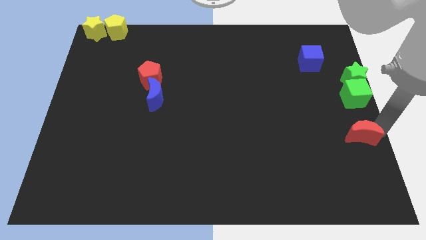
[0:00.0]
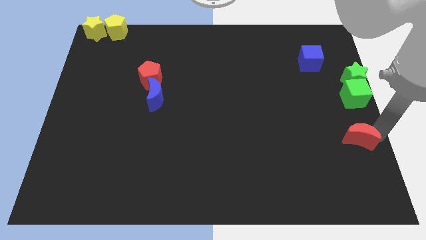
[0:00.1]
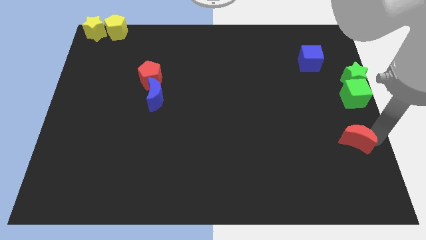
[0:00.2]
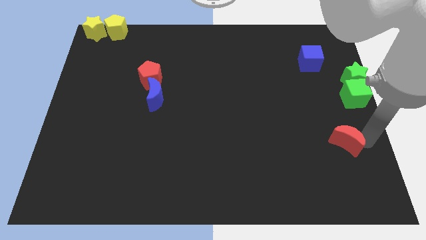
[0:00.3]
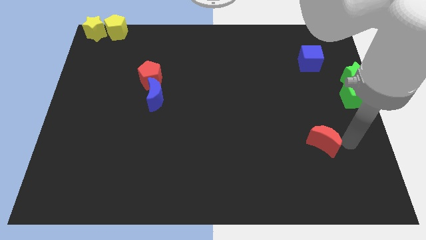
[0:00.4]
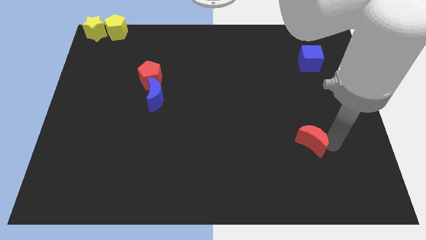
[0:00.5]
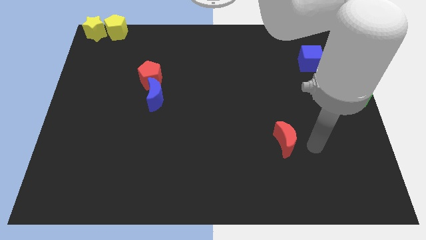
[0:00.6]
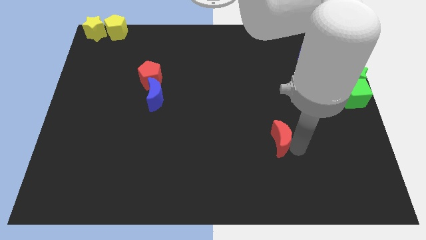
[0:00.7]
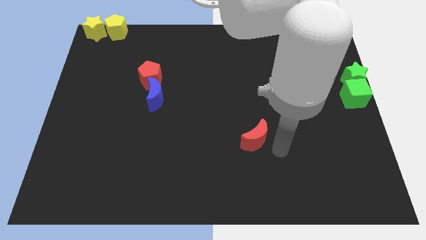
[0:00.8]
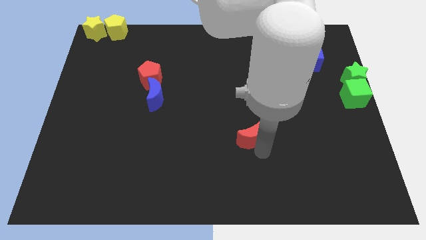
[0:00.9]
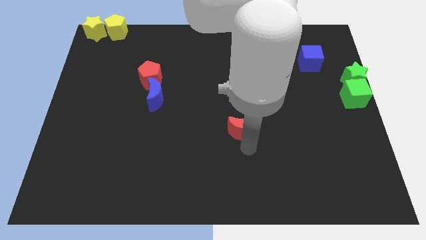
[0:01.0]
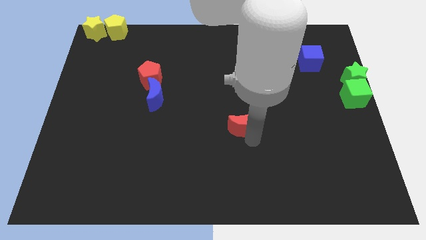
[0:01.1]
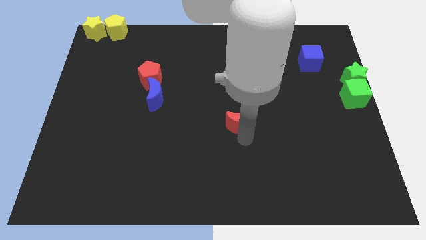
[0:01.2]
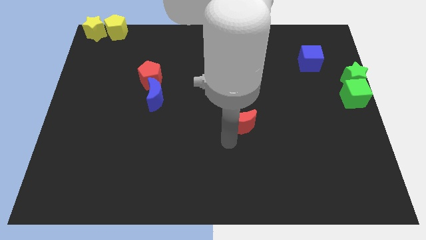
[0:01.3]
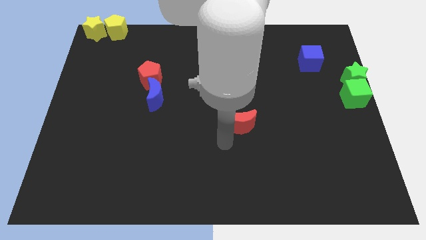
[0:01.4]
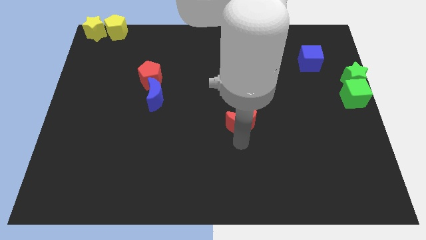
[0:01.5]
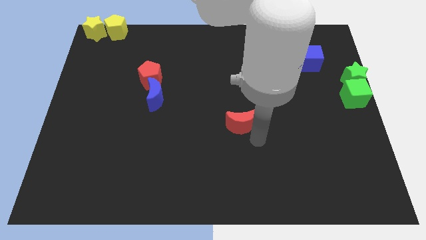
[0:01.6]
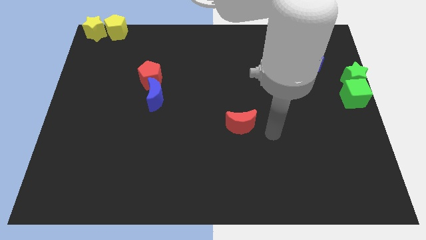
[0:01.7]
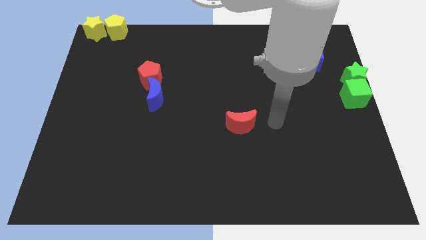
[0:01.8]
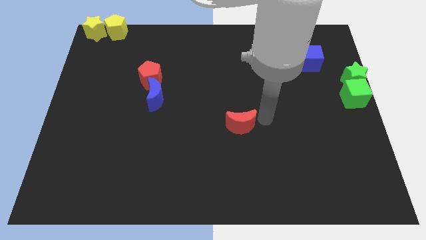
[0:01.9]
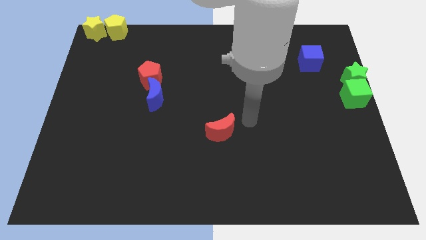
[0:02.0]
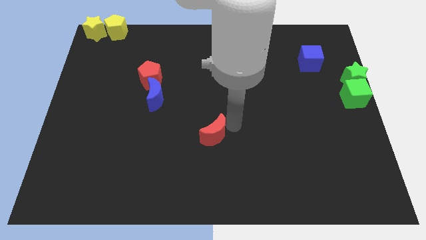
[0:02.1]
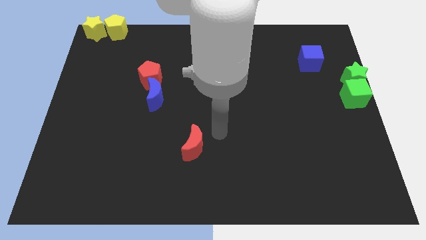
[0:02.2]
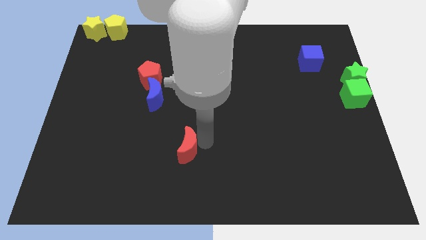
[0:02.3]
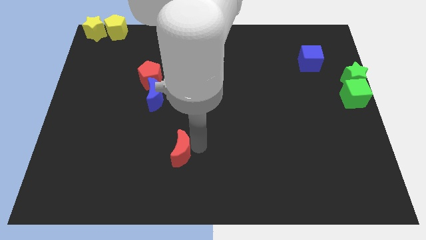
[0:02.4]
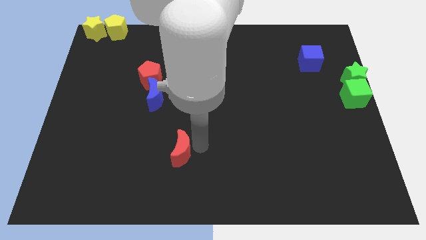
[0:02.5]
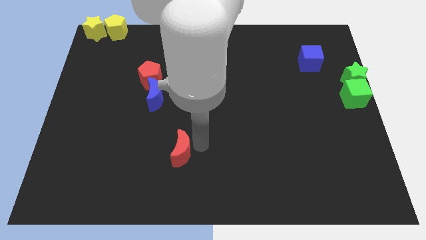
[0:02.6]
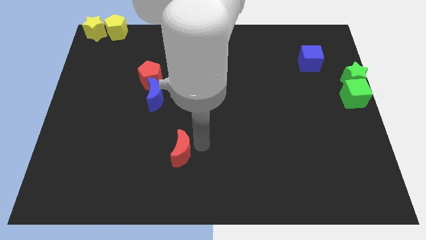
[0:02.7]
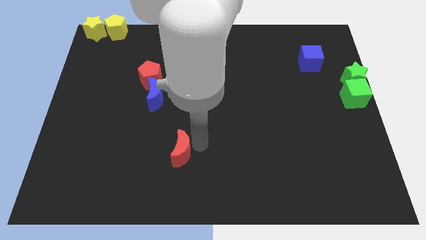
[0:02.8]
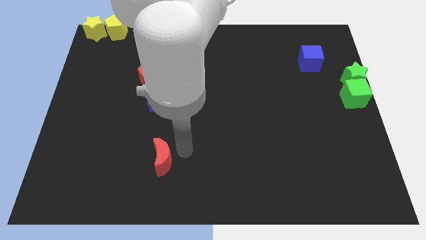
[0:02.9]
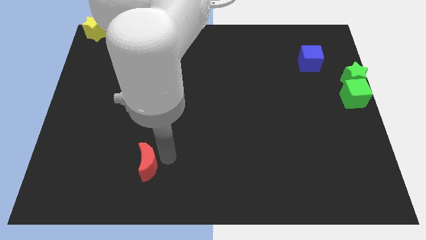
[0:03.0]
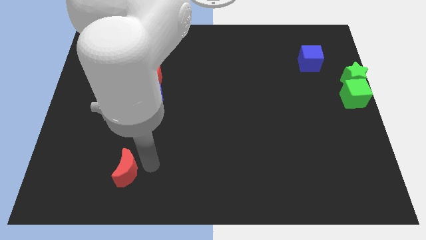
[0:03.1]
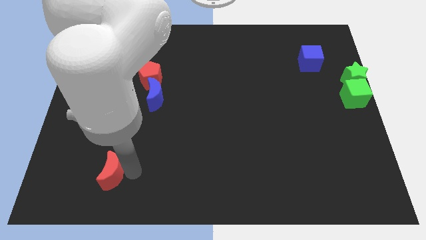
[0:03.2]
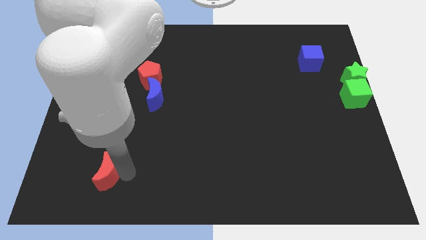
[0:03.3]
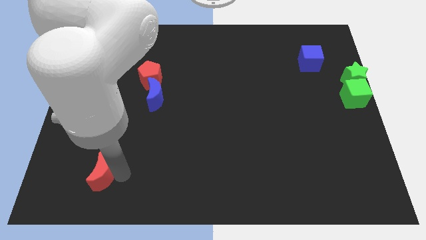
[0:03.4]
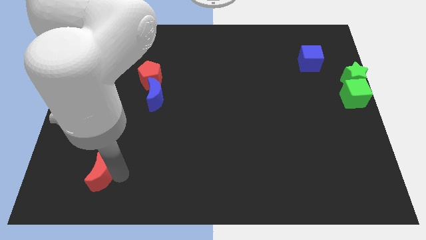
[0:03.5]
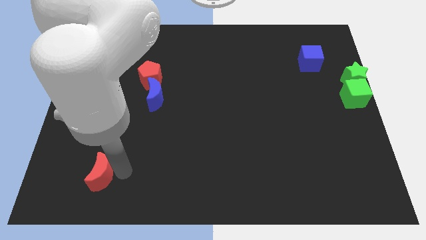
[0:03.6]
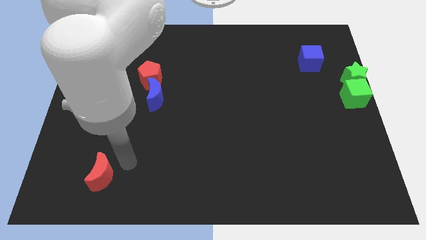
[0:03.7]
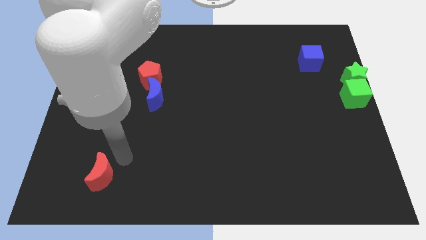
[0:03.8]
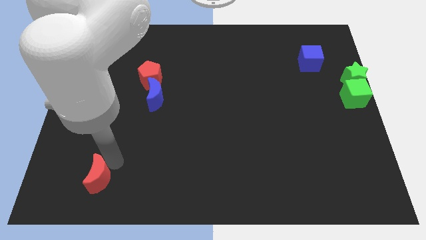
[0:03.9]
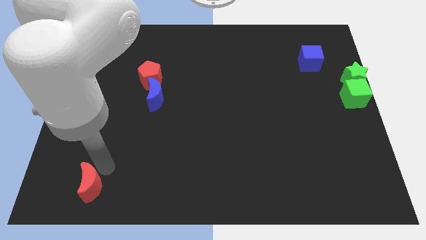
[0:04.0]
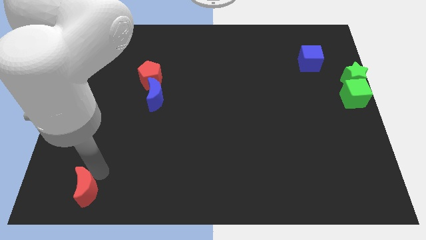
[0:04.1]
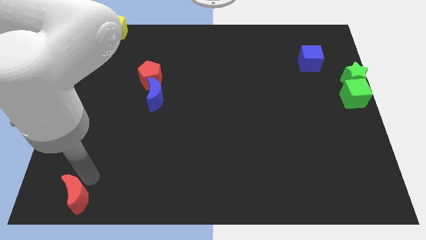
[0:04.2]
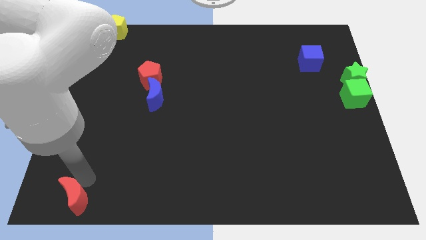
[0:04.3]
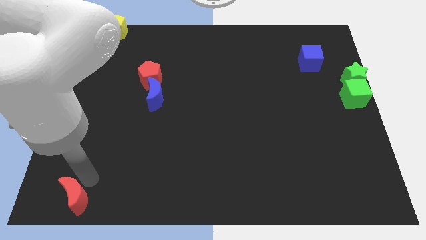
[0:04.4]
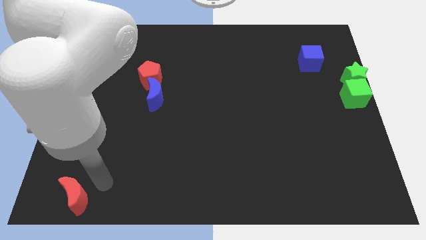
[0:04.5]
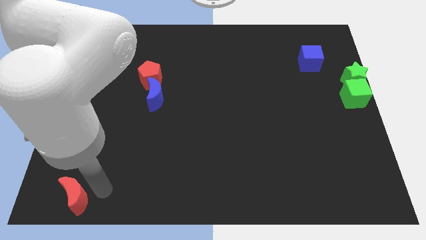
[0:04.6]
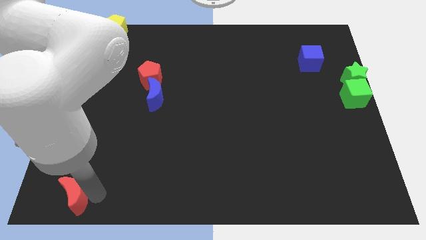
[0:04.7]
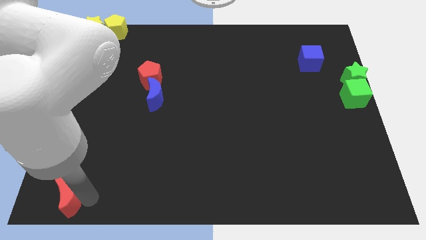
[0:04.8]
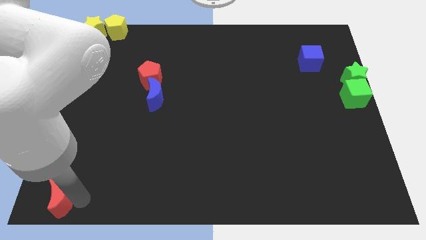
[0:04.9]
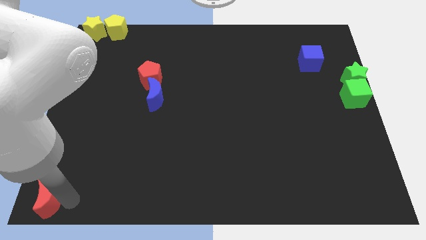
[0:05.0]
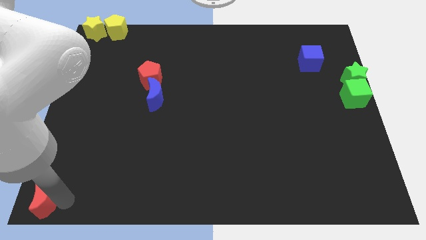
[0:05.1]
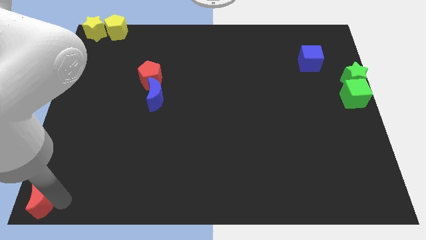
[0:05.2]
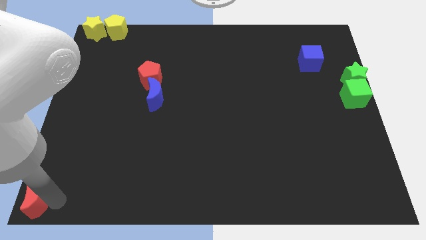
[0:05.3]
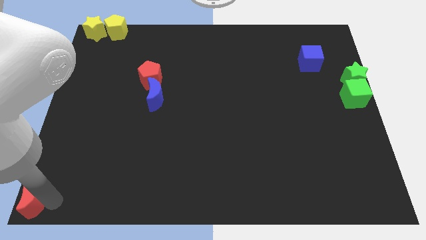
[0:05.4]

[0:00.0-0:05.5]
move the red crescent to the left bottom corner

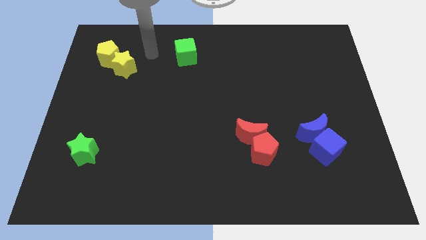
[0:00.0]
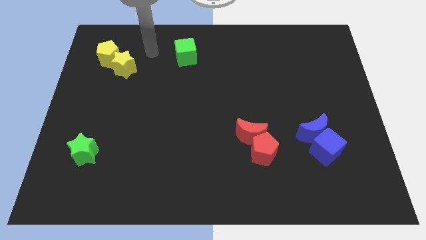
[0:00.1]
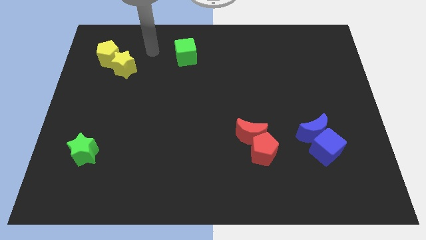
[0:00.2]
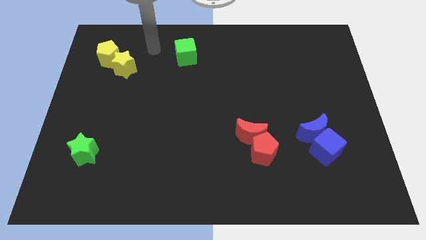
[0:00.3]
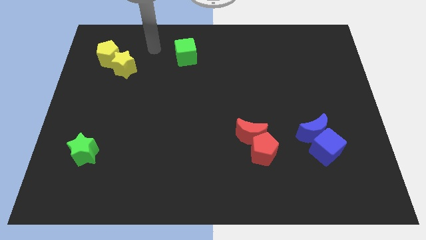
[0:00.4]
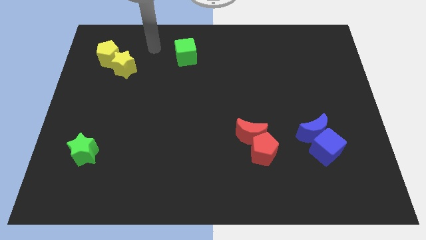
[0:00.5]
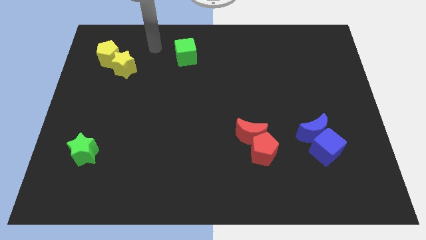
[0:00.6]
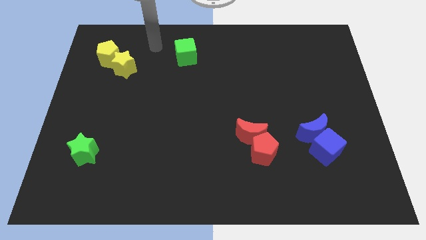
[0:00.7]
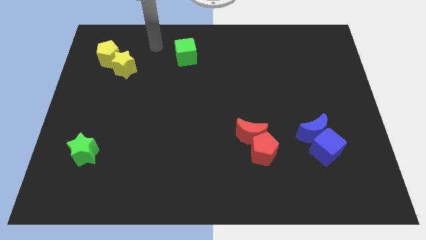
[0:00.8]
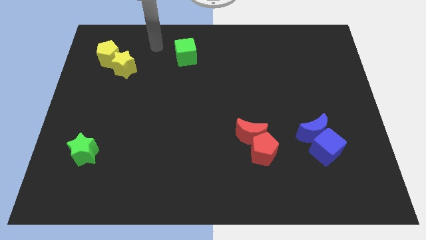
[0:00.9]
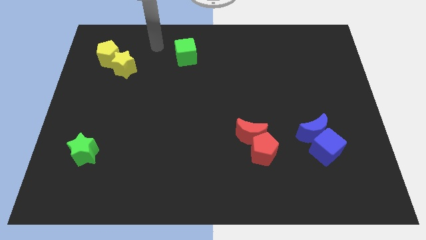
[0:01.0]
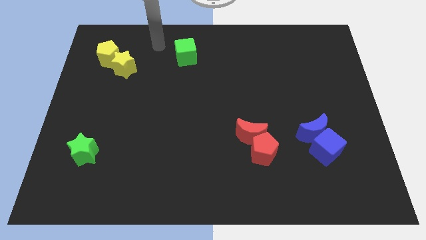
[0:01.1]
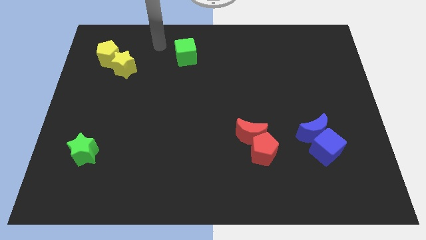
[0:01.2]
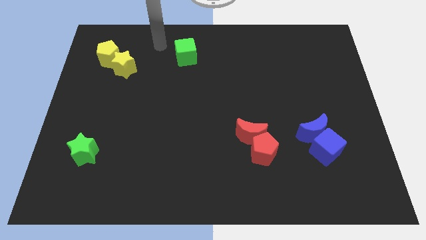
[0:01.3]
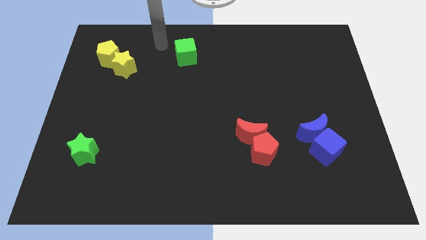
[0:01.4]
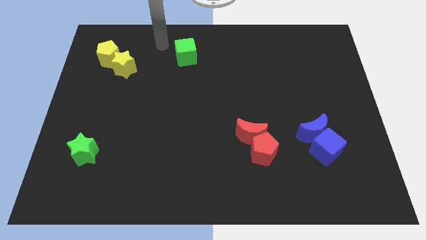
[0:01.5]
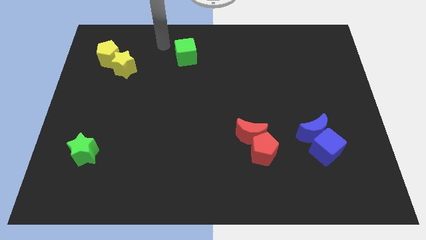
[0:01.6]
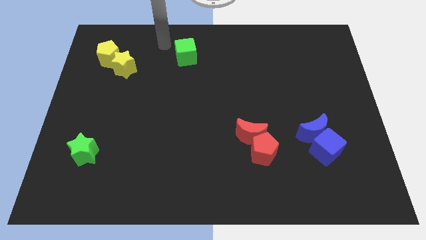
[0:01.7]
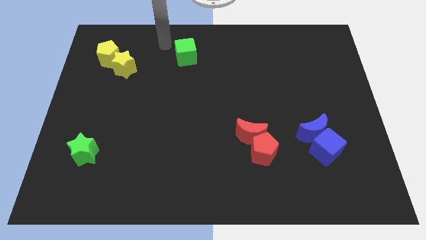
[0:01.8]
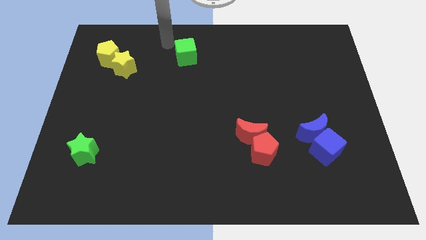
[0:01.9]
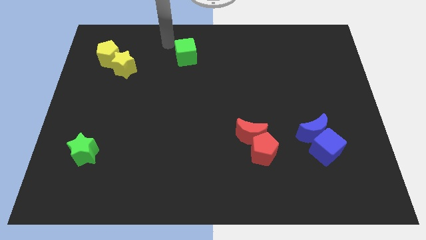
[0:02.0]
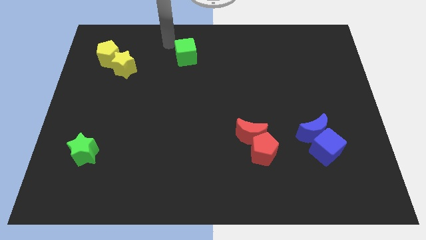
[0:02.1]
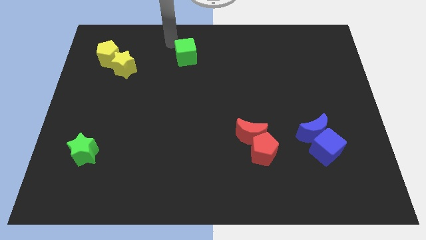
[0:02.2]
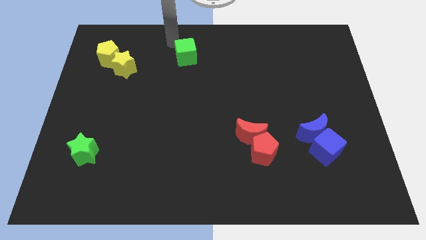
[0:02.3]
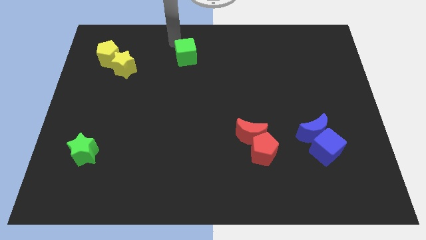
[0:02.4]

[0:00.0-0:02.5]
place your arm above green cube

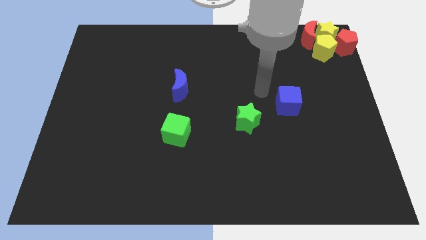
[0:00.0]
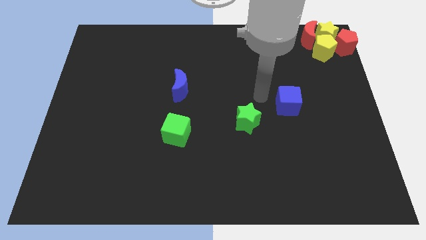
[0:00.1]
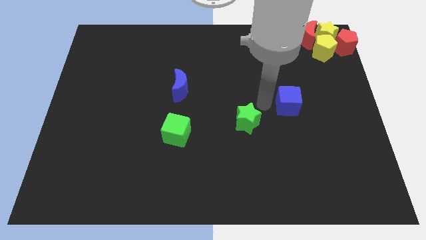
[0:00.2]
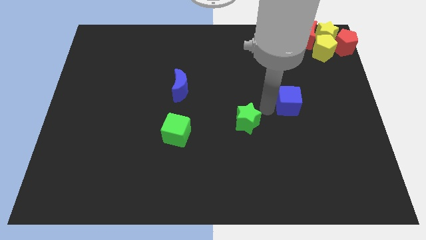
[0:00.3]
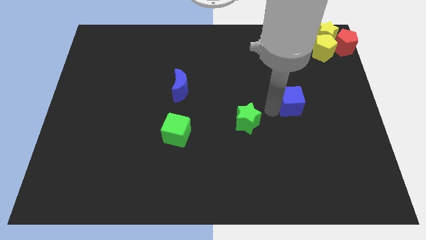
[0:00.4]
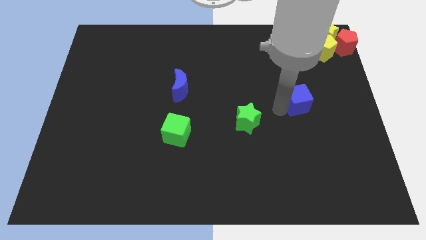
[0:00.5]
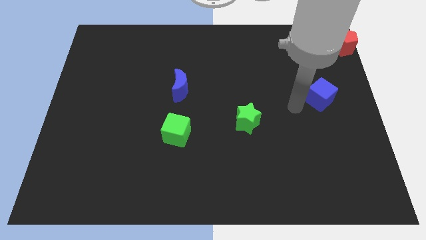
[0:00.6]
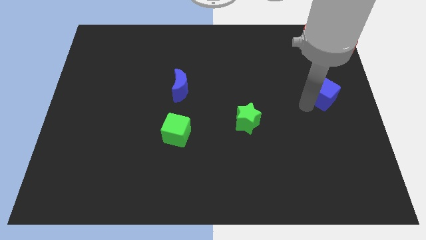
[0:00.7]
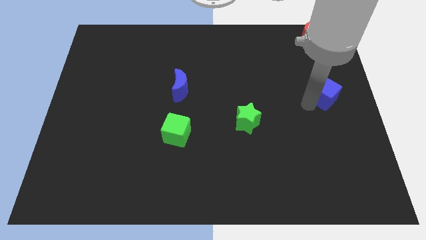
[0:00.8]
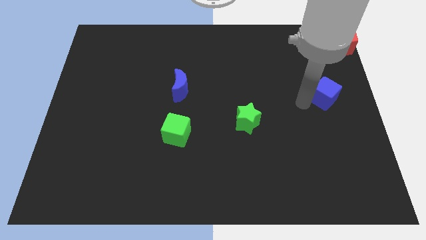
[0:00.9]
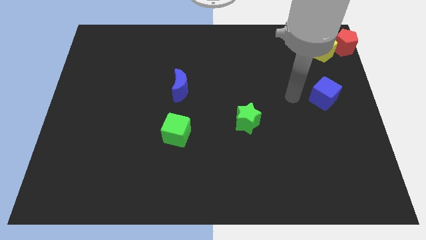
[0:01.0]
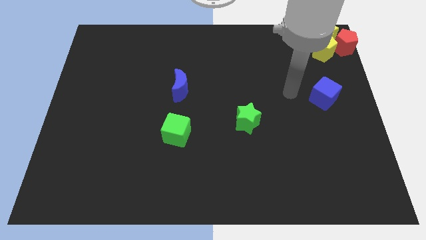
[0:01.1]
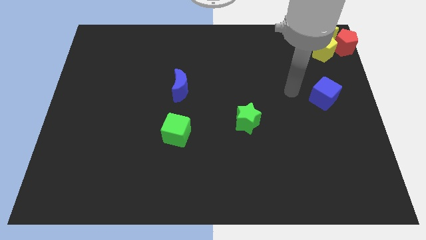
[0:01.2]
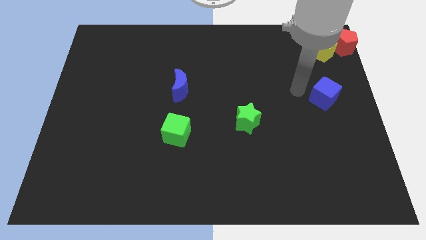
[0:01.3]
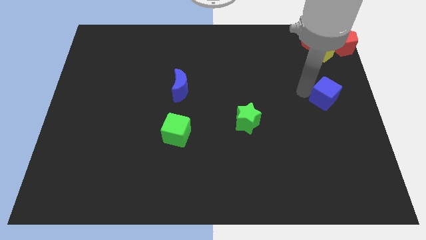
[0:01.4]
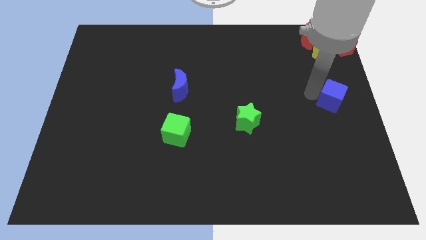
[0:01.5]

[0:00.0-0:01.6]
move blue cube to the right side of the board
